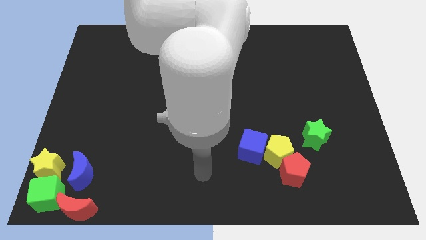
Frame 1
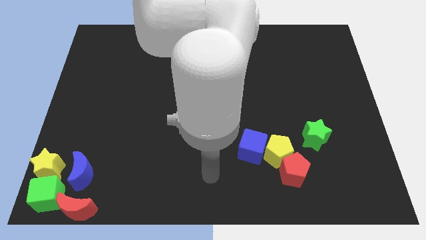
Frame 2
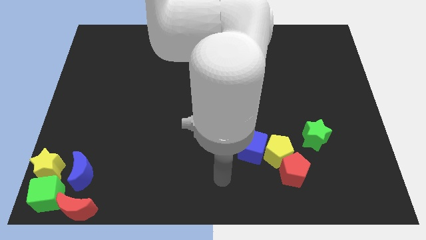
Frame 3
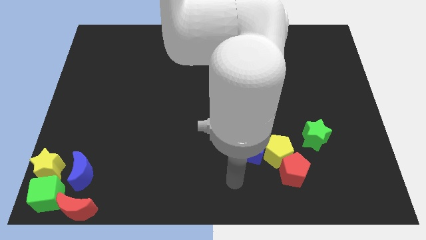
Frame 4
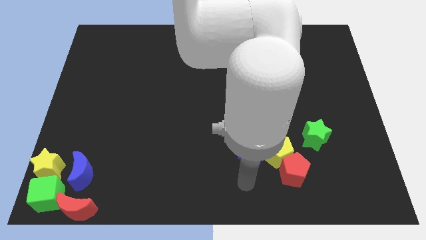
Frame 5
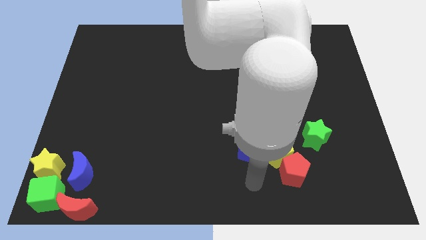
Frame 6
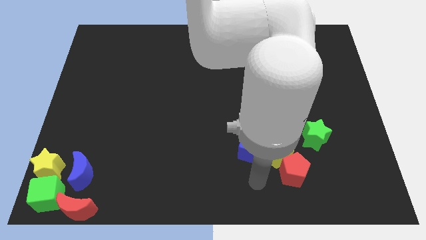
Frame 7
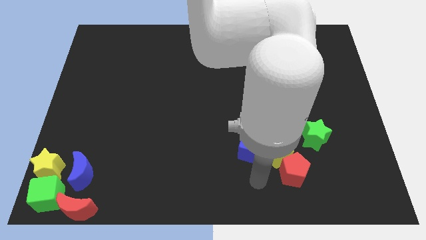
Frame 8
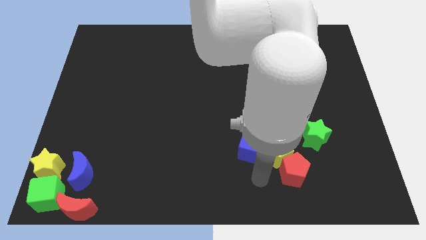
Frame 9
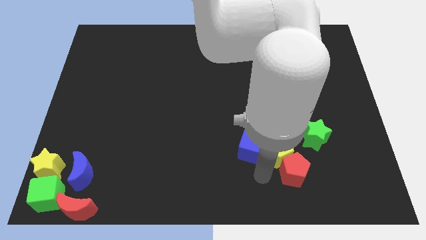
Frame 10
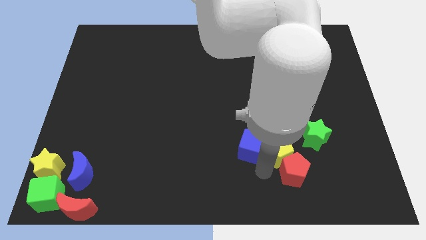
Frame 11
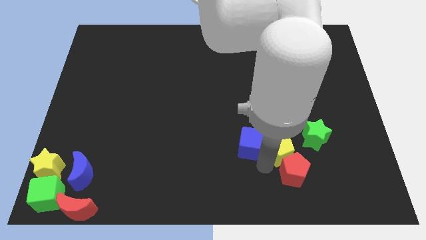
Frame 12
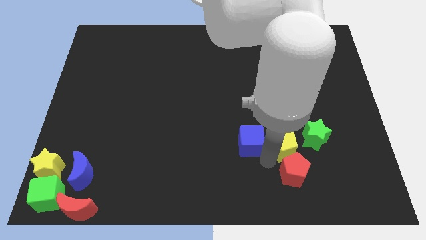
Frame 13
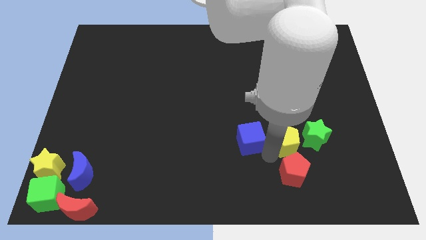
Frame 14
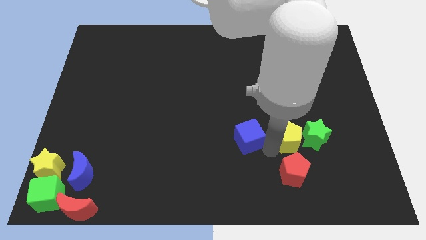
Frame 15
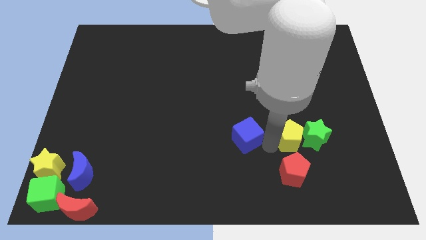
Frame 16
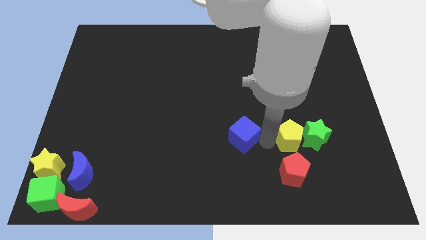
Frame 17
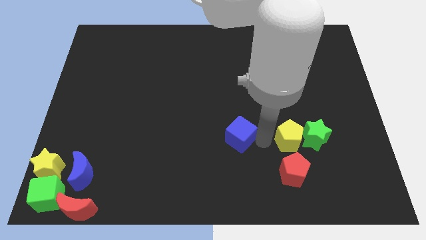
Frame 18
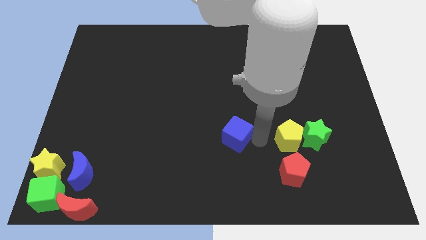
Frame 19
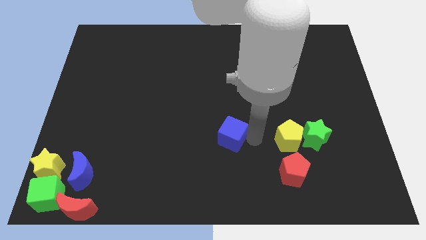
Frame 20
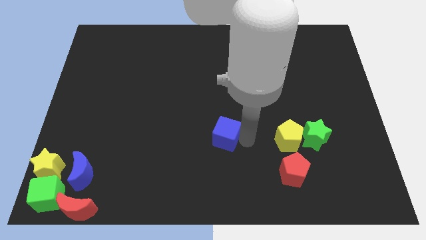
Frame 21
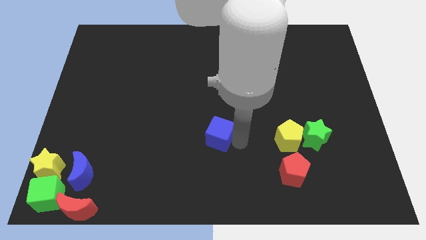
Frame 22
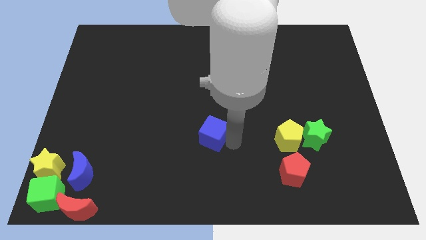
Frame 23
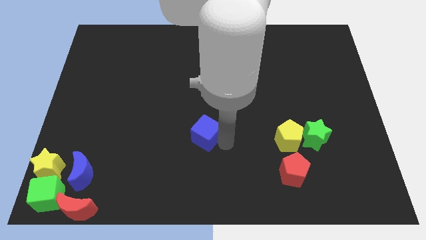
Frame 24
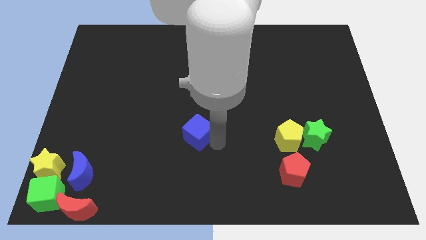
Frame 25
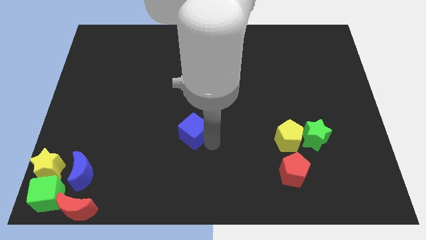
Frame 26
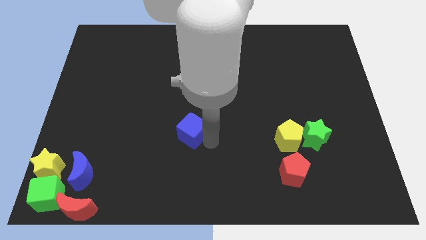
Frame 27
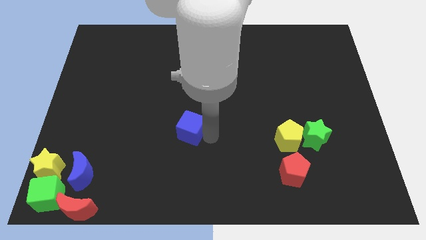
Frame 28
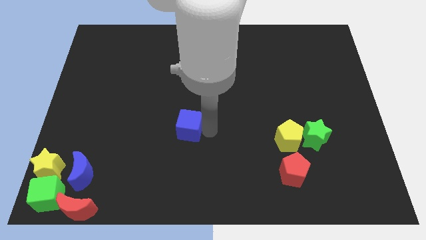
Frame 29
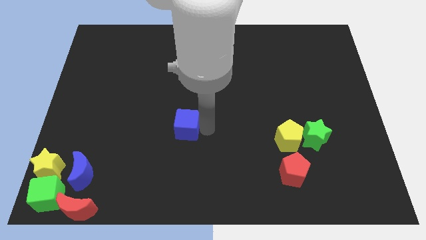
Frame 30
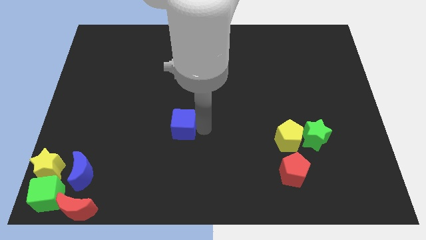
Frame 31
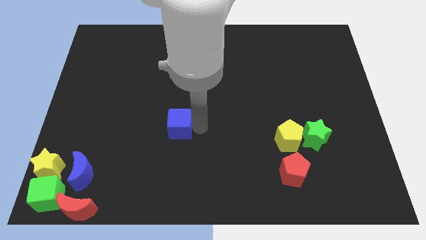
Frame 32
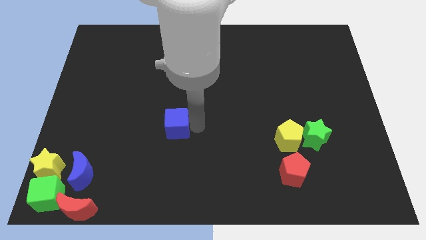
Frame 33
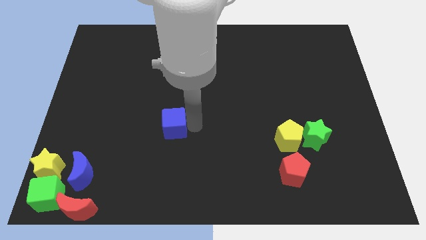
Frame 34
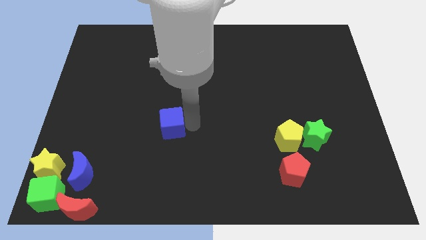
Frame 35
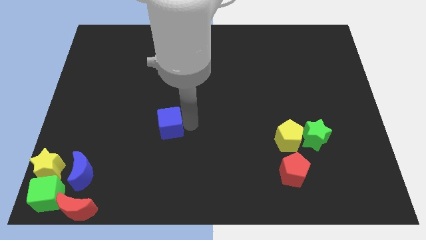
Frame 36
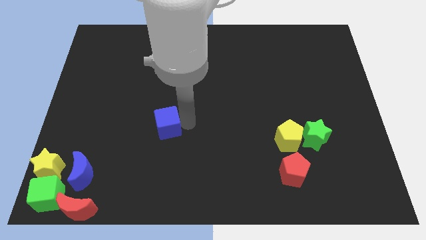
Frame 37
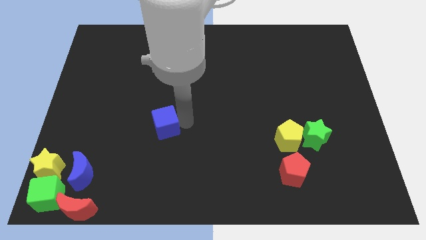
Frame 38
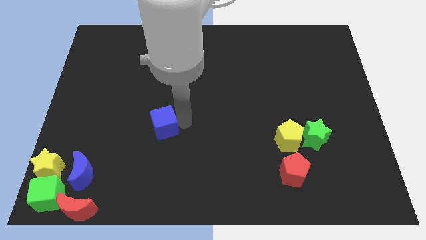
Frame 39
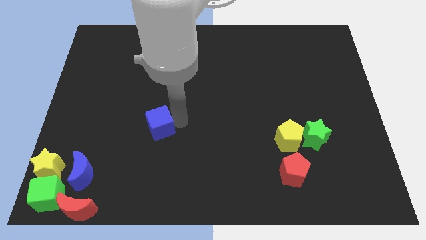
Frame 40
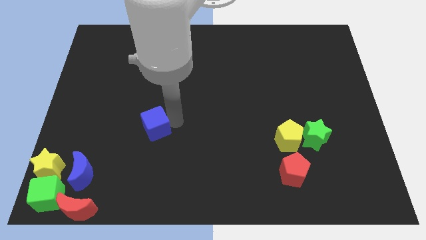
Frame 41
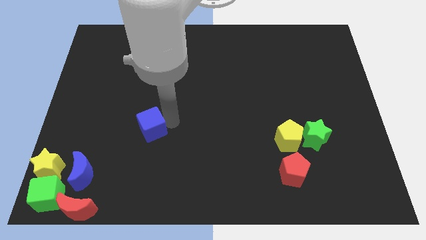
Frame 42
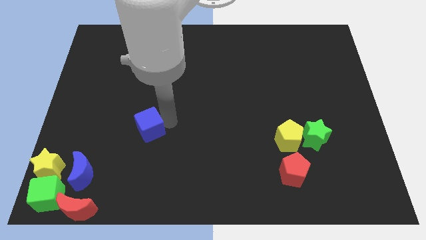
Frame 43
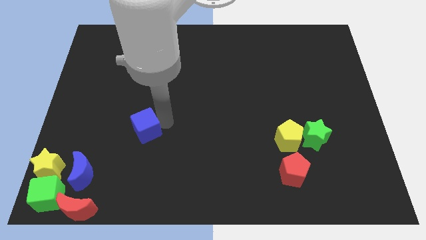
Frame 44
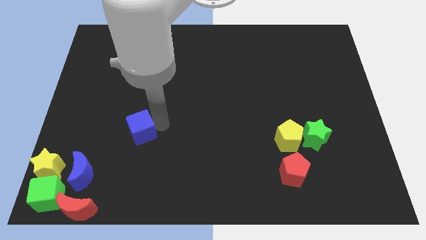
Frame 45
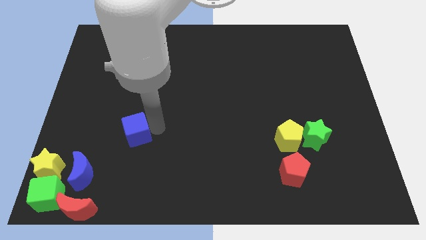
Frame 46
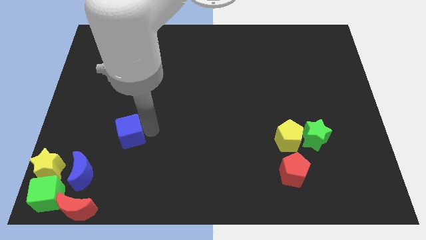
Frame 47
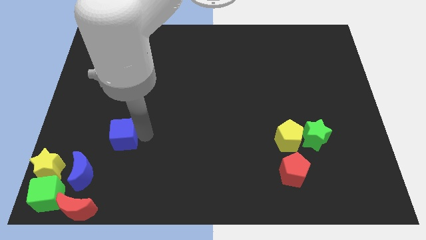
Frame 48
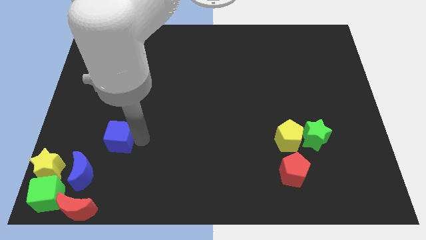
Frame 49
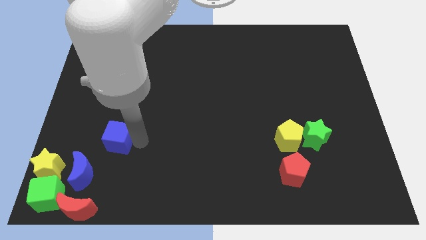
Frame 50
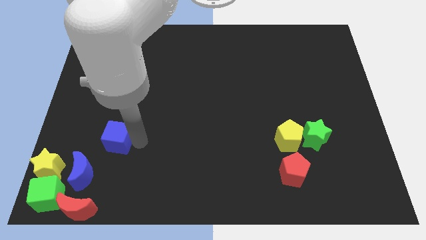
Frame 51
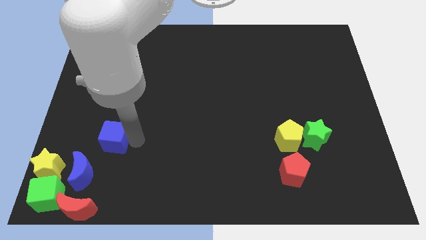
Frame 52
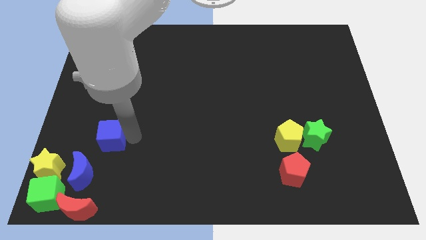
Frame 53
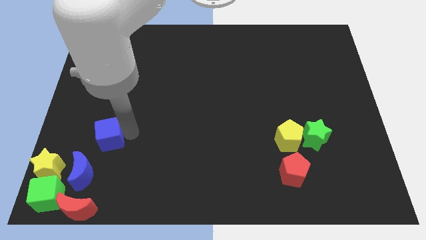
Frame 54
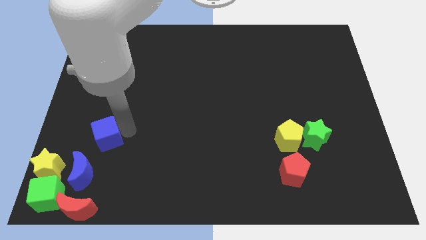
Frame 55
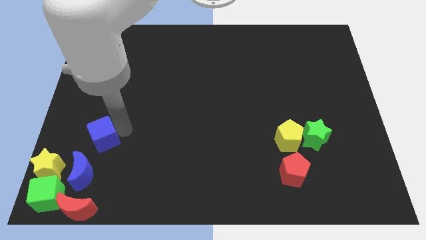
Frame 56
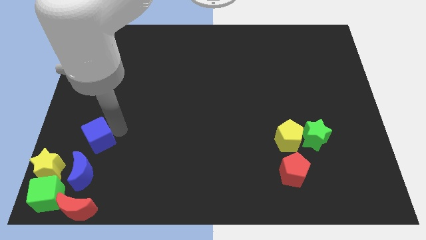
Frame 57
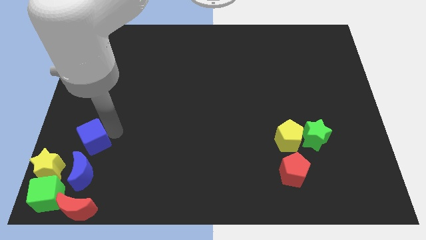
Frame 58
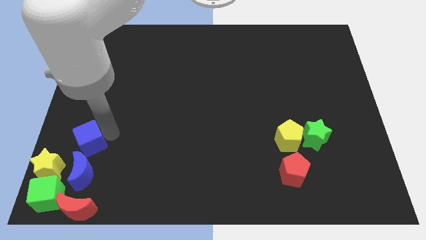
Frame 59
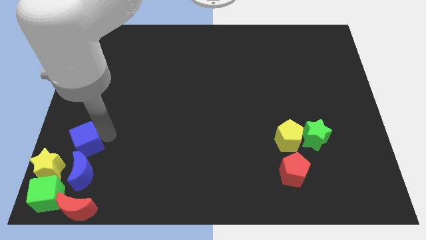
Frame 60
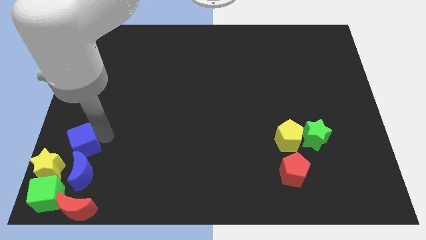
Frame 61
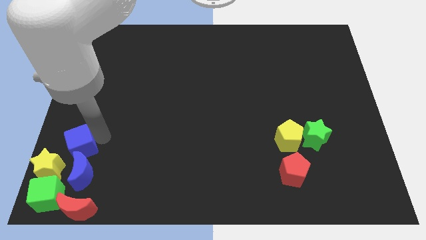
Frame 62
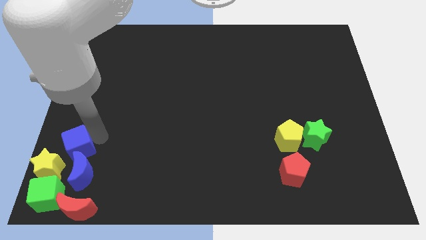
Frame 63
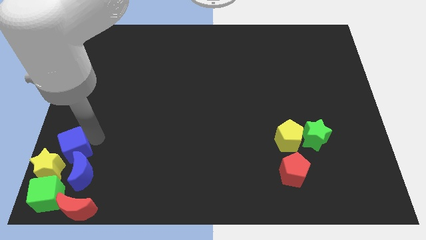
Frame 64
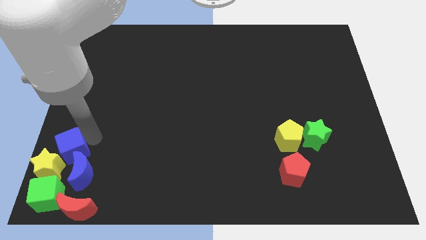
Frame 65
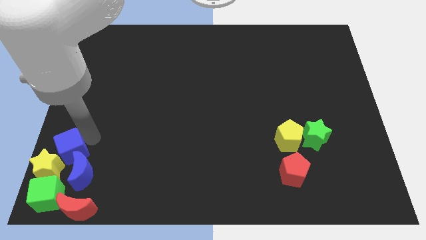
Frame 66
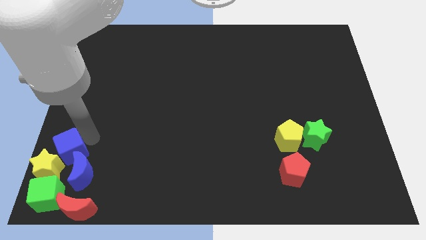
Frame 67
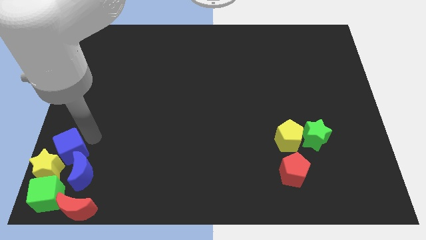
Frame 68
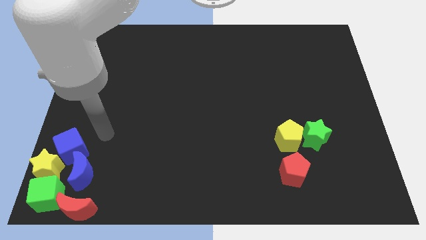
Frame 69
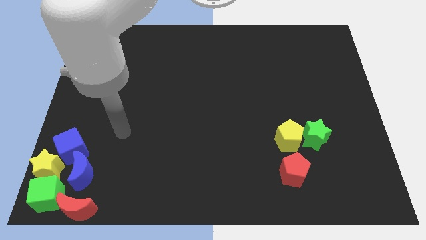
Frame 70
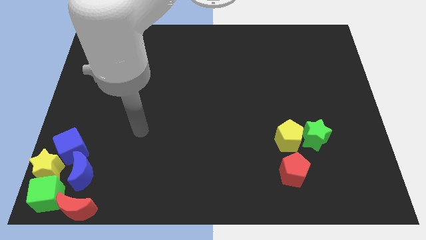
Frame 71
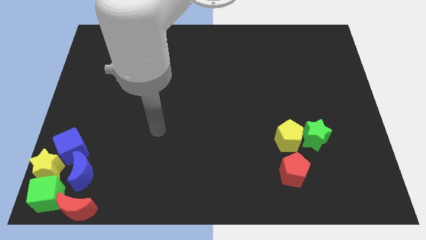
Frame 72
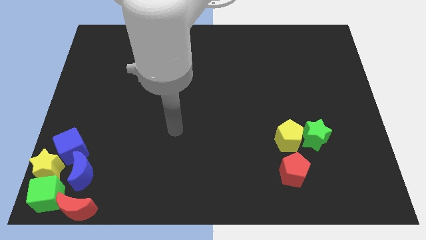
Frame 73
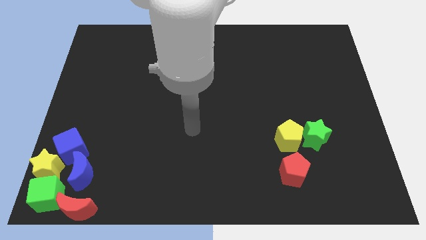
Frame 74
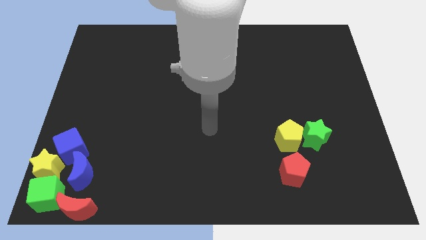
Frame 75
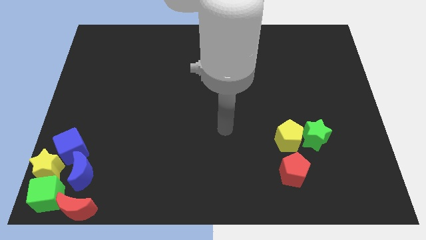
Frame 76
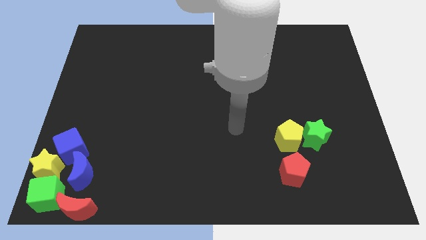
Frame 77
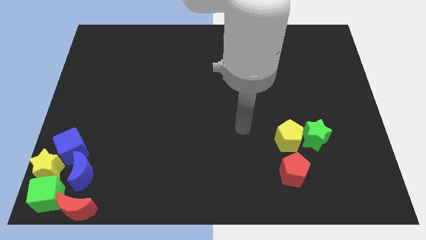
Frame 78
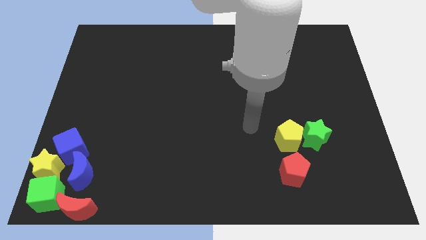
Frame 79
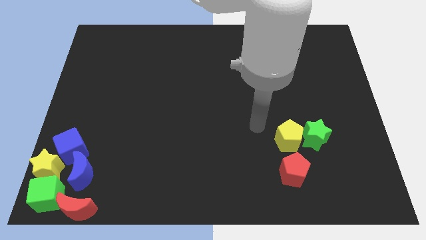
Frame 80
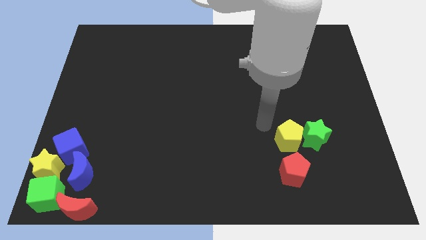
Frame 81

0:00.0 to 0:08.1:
move the blue cube at the top right side of the yellow star

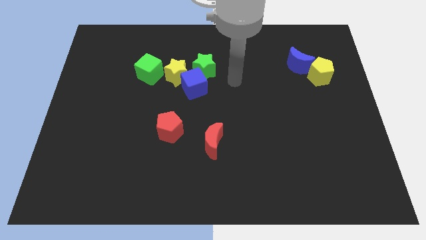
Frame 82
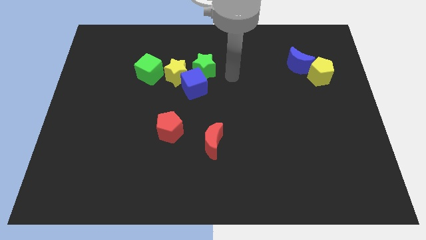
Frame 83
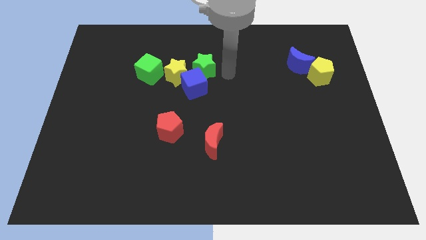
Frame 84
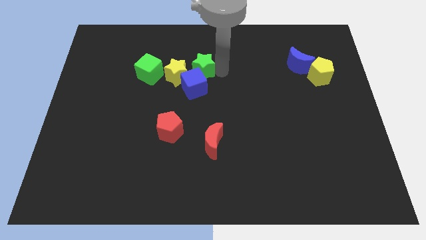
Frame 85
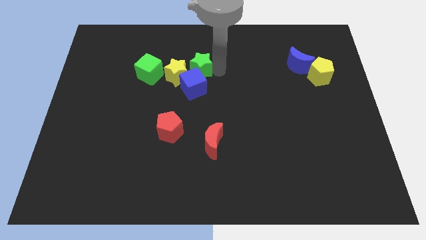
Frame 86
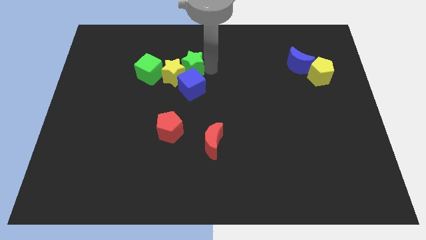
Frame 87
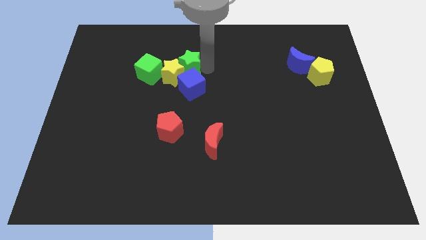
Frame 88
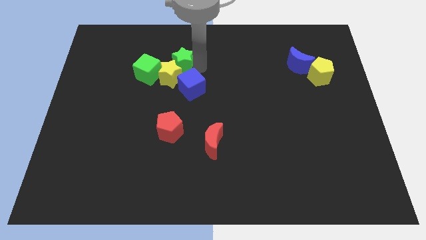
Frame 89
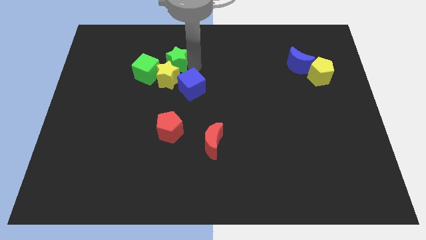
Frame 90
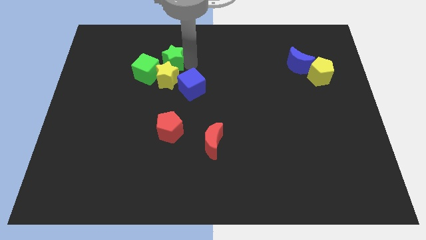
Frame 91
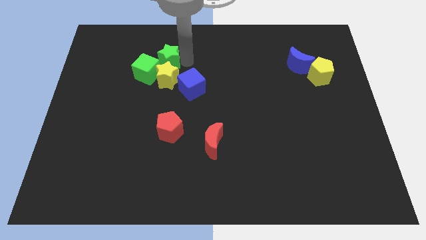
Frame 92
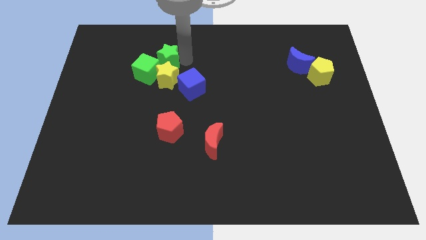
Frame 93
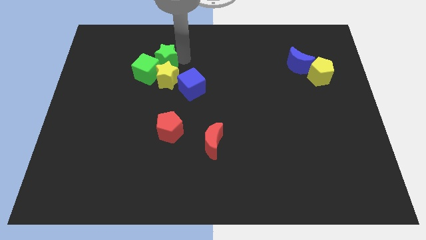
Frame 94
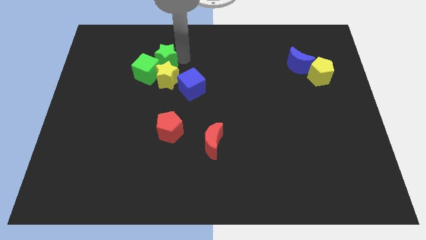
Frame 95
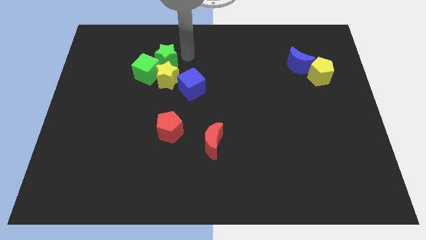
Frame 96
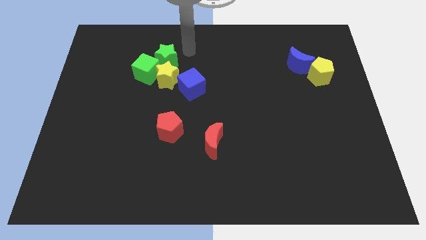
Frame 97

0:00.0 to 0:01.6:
push the green star into the yellow star
